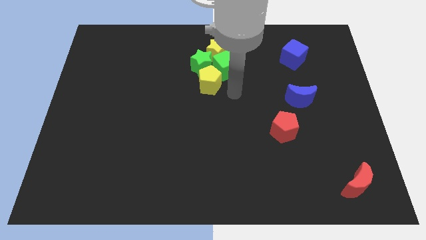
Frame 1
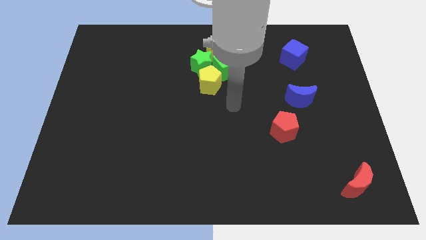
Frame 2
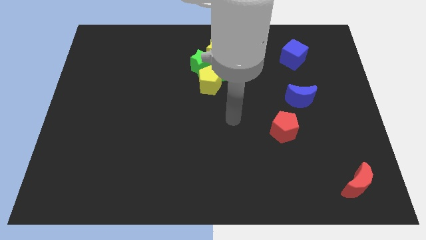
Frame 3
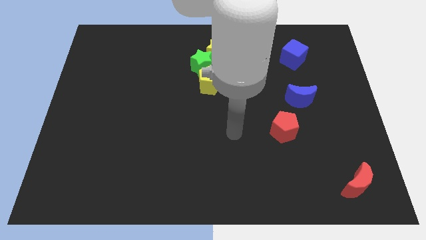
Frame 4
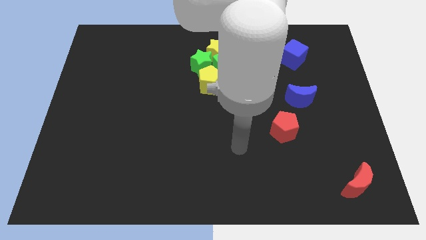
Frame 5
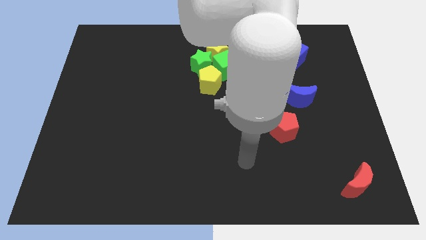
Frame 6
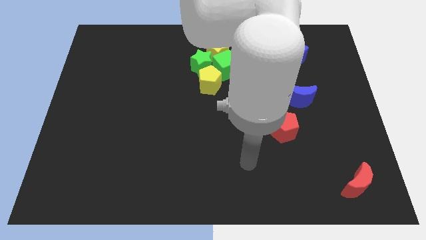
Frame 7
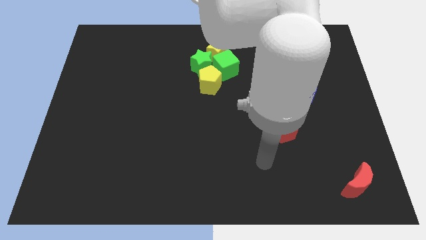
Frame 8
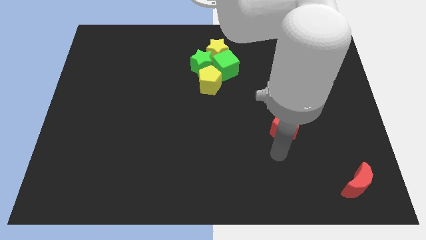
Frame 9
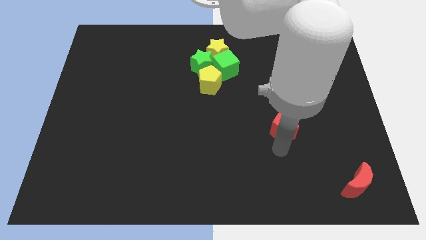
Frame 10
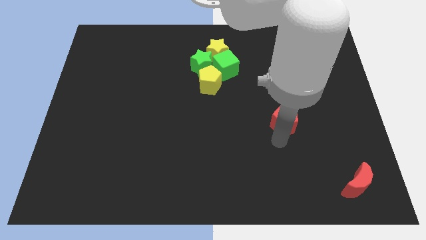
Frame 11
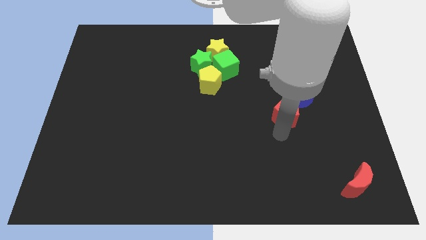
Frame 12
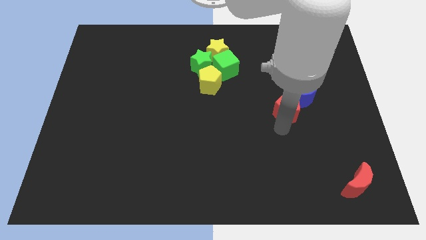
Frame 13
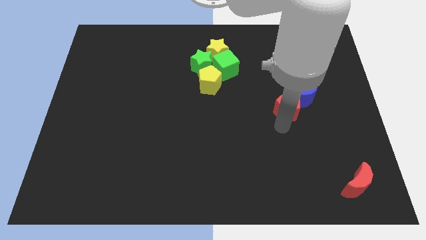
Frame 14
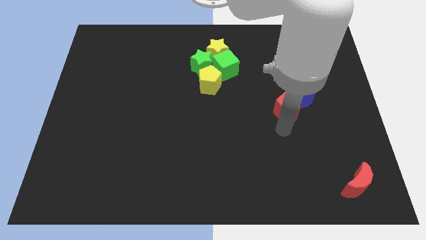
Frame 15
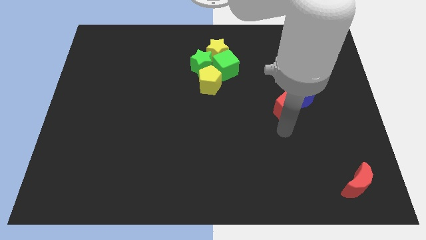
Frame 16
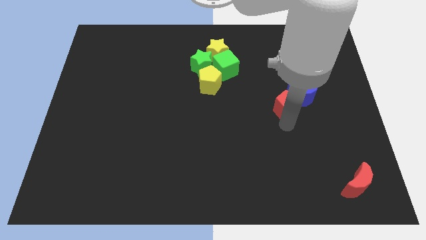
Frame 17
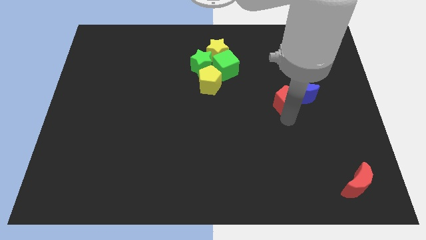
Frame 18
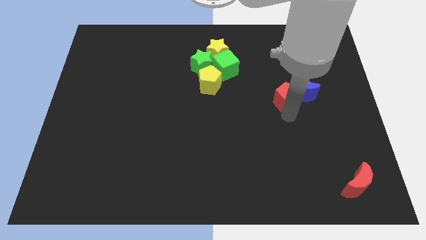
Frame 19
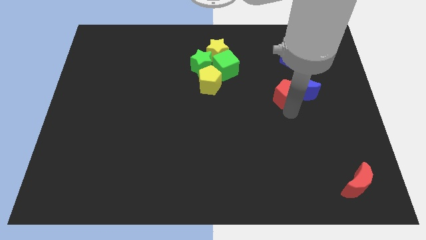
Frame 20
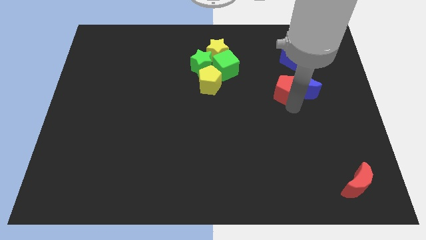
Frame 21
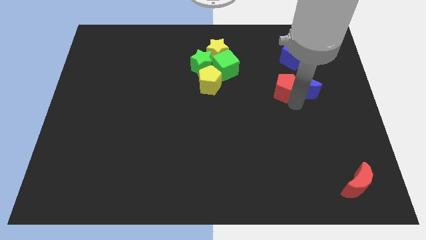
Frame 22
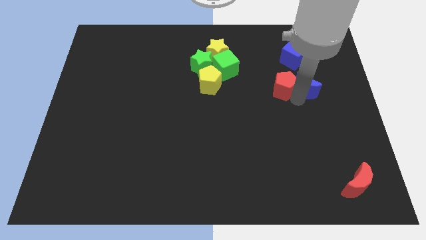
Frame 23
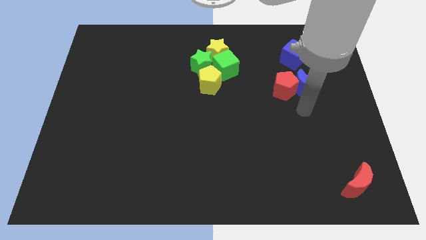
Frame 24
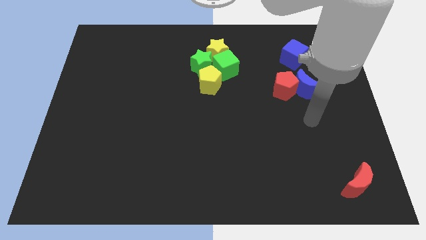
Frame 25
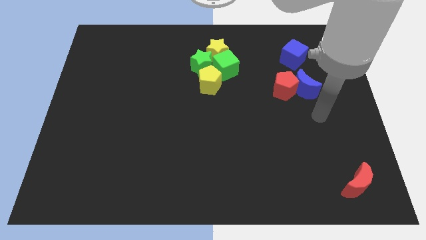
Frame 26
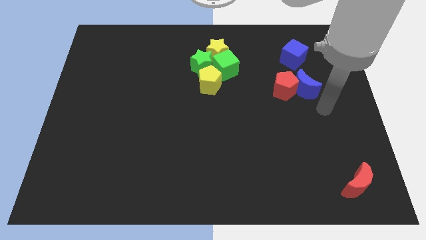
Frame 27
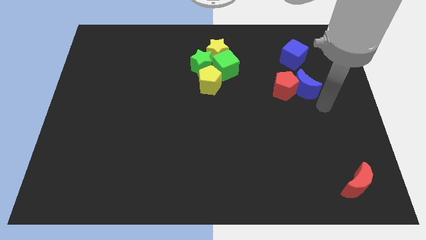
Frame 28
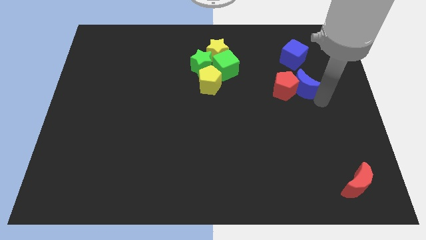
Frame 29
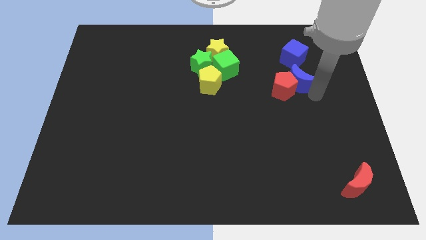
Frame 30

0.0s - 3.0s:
place the red pentagon left to the blue crescent

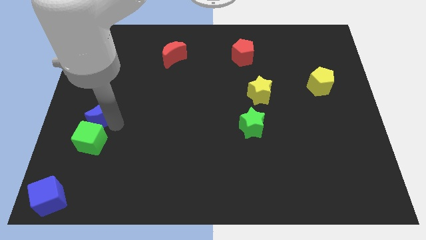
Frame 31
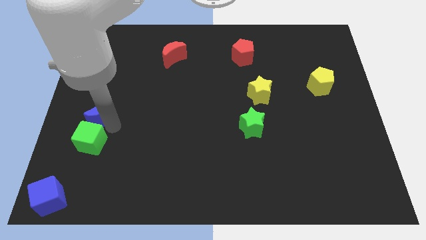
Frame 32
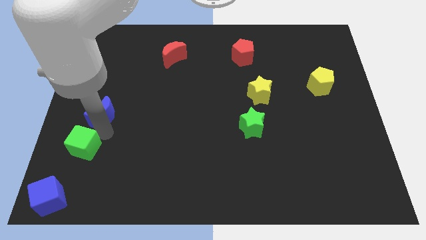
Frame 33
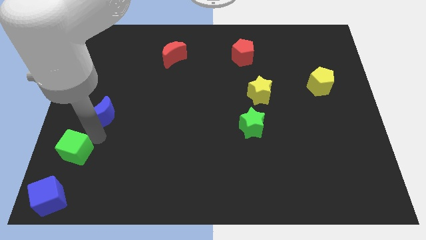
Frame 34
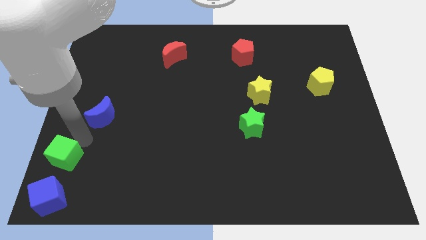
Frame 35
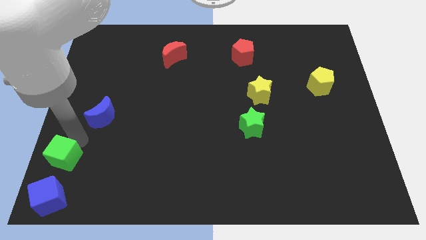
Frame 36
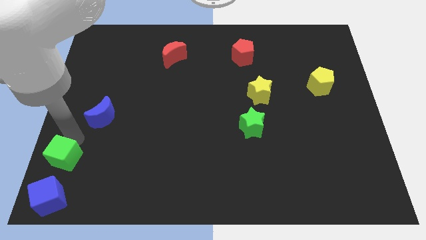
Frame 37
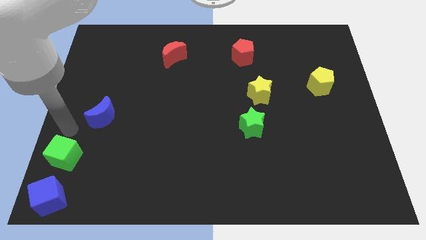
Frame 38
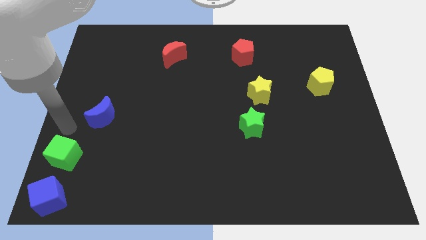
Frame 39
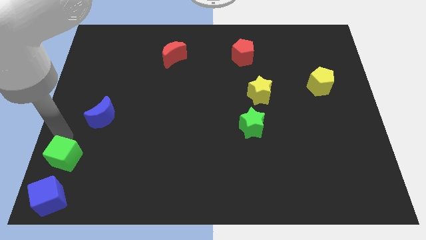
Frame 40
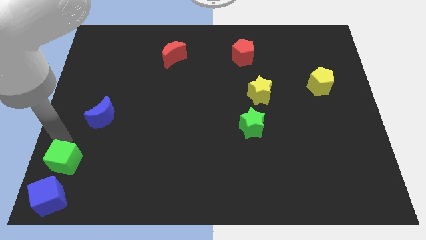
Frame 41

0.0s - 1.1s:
push the green cube towards the blue cube

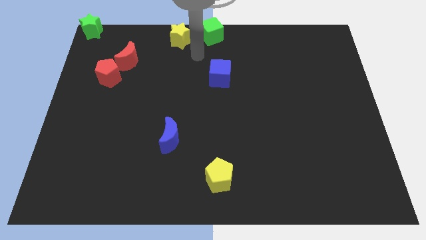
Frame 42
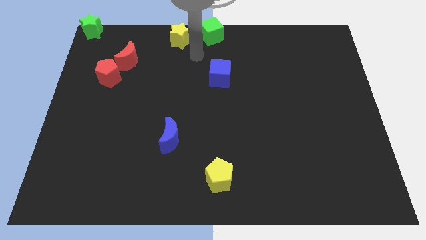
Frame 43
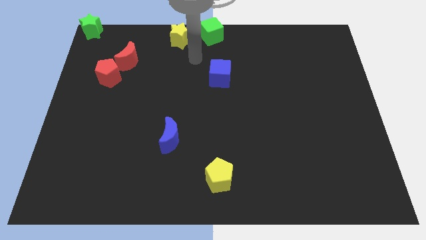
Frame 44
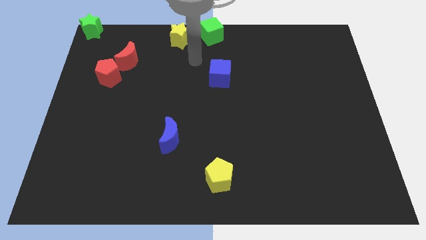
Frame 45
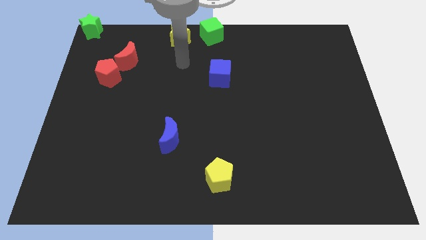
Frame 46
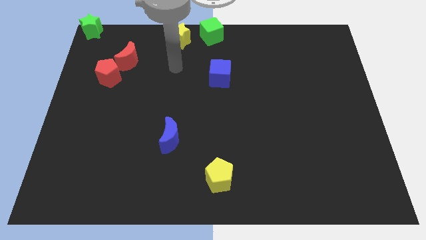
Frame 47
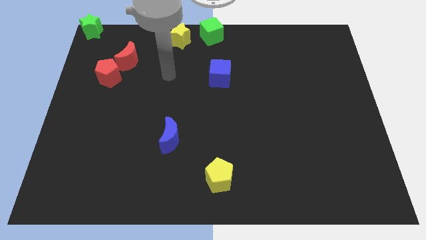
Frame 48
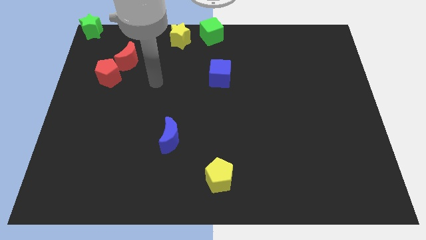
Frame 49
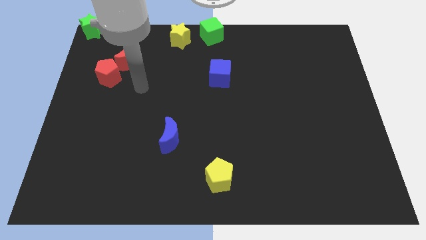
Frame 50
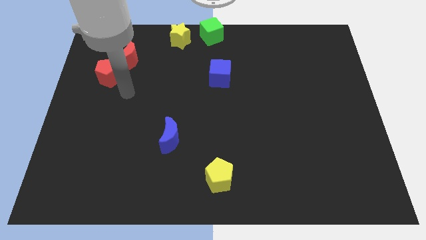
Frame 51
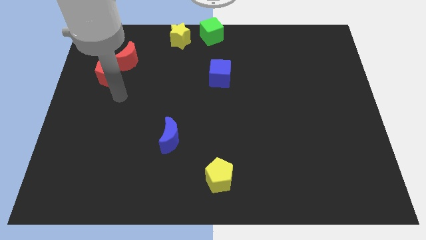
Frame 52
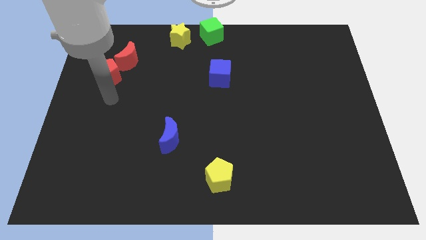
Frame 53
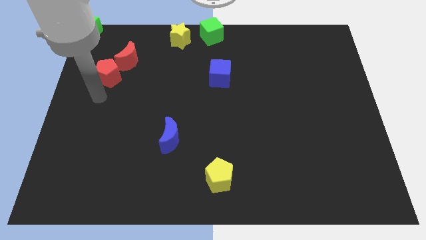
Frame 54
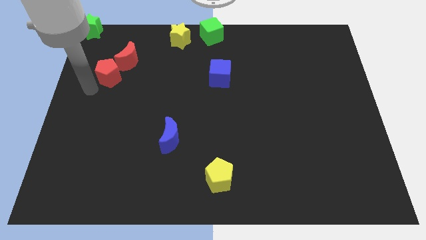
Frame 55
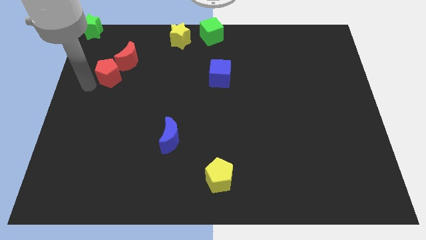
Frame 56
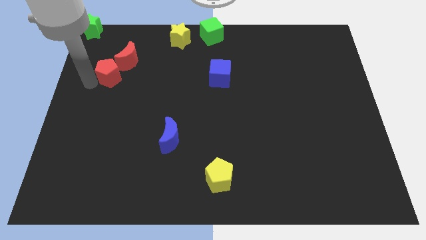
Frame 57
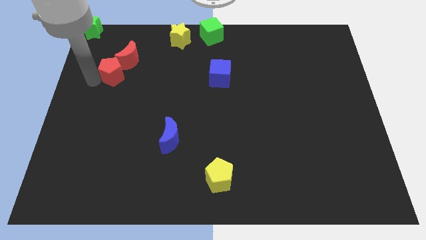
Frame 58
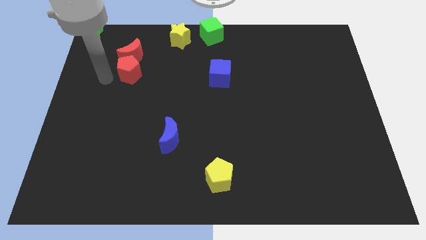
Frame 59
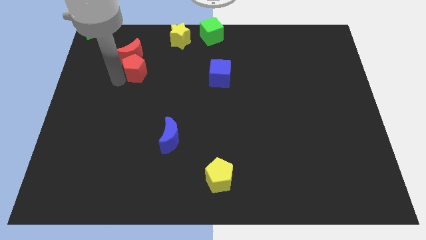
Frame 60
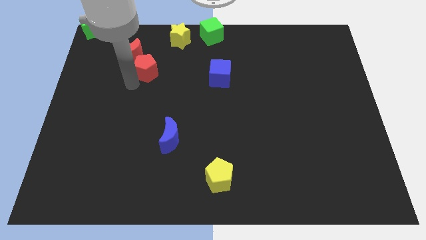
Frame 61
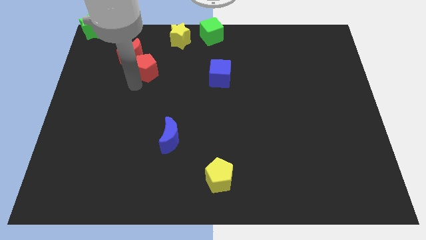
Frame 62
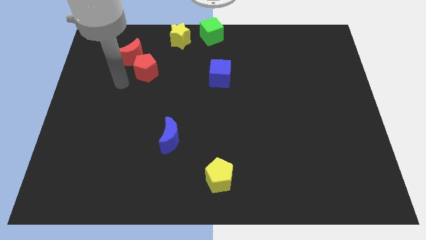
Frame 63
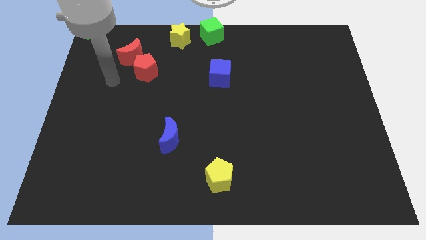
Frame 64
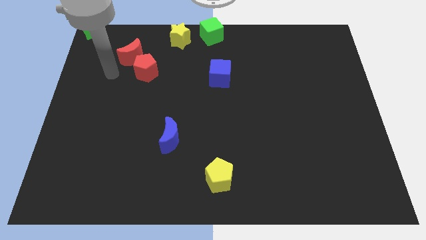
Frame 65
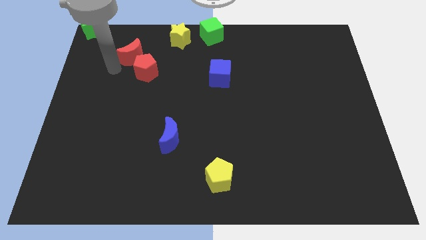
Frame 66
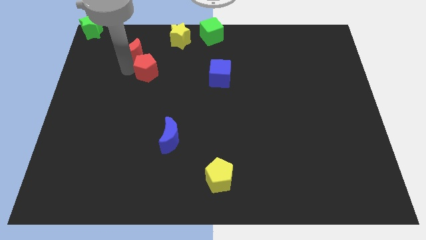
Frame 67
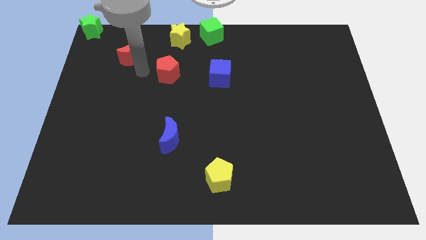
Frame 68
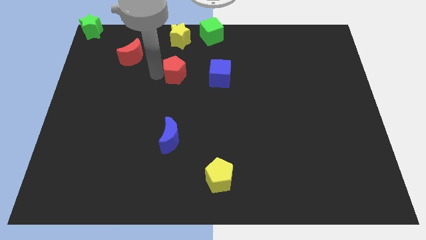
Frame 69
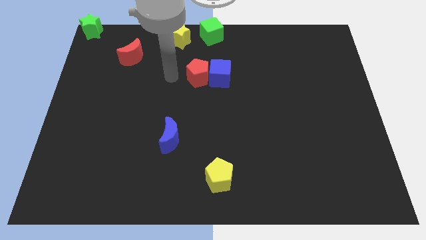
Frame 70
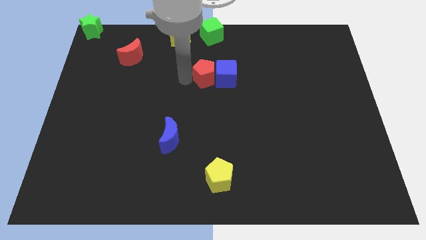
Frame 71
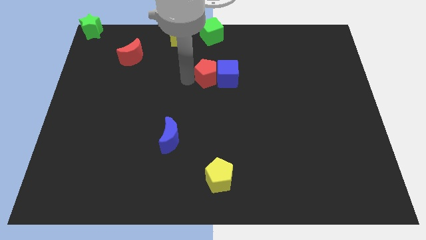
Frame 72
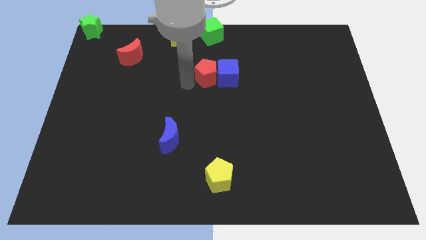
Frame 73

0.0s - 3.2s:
push the red pentagon into the blue cube

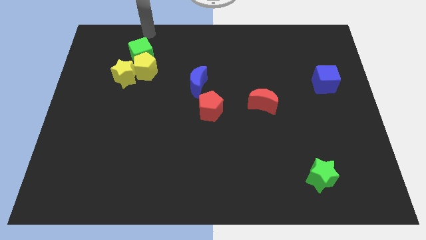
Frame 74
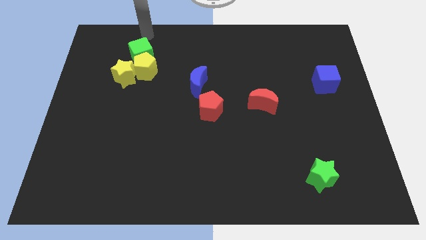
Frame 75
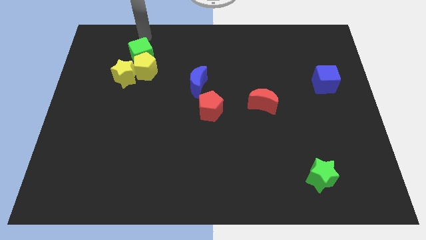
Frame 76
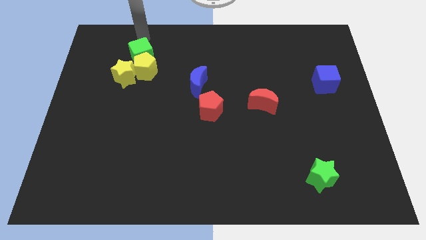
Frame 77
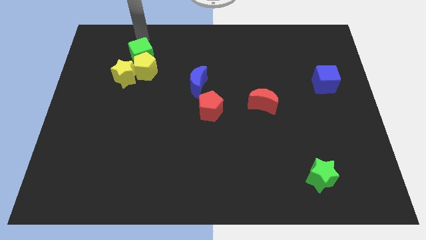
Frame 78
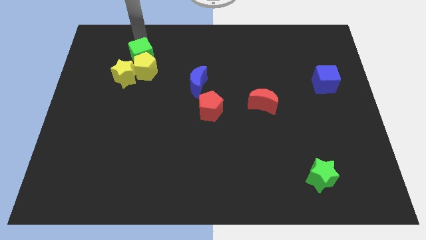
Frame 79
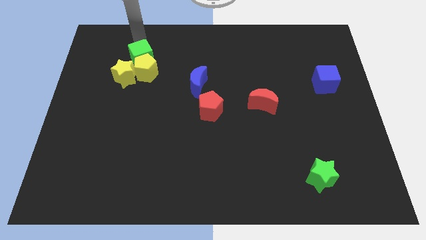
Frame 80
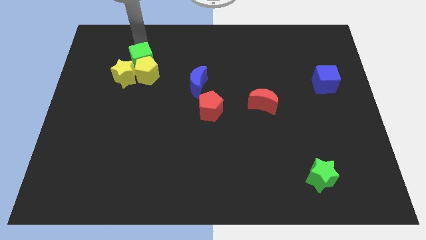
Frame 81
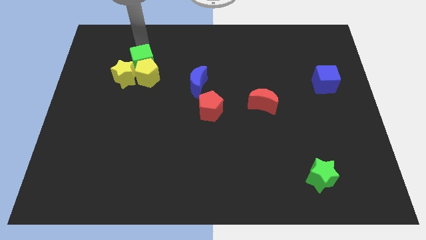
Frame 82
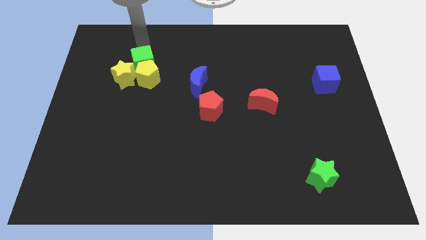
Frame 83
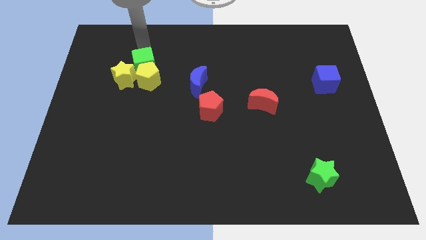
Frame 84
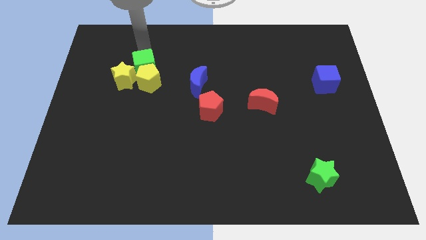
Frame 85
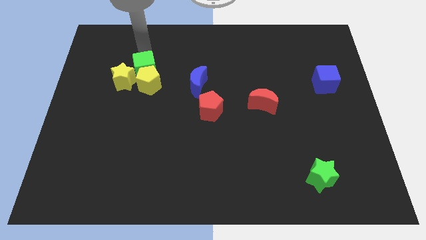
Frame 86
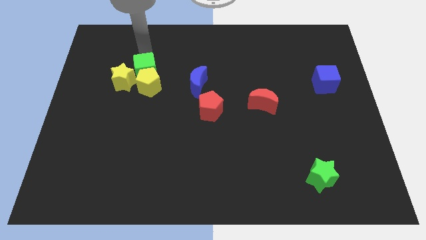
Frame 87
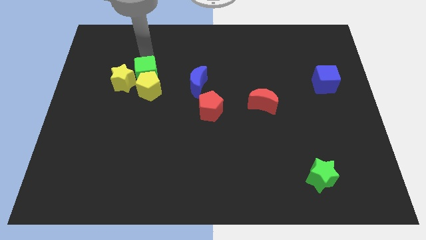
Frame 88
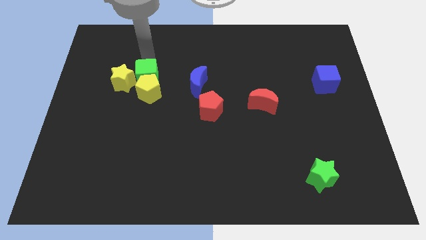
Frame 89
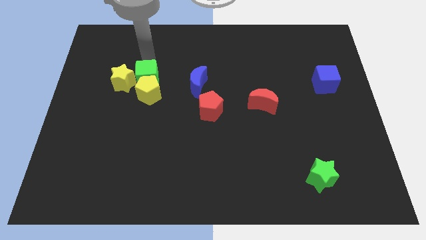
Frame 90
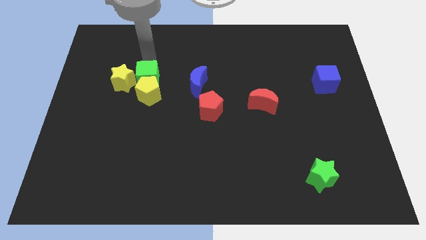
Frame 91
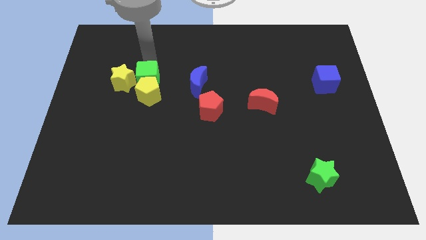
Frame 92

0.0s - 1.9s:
move the green cube into yellow pentagon
